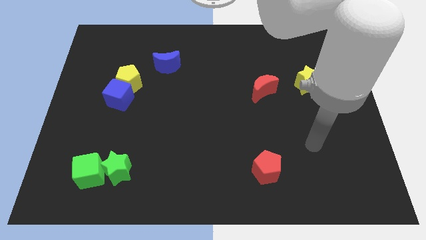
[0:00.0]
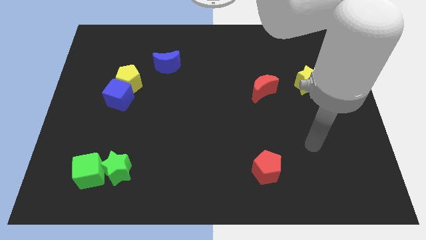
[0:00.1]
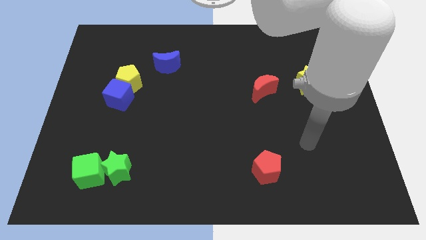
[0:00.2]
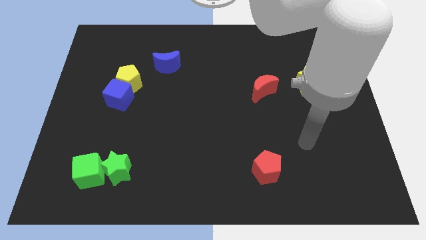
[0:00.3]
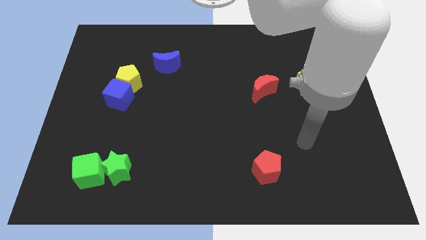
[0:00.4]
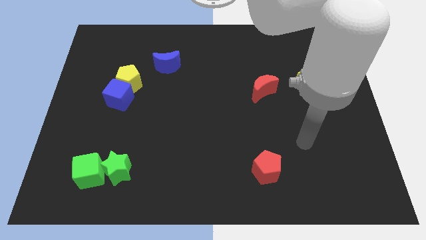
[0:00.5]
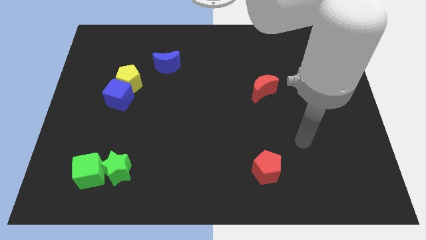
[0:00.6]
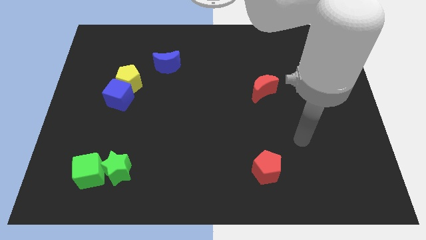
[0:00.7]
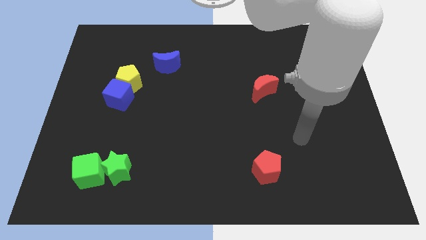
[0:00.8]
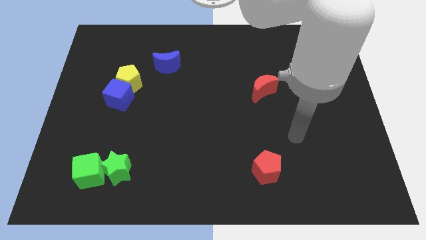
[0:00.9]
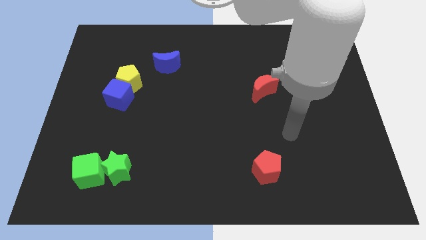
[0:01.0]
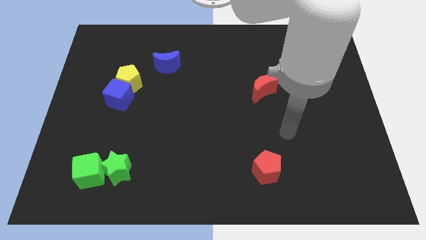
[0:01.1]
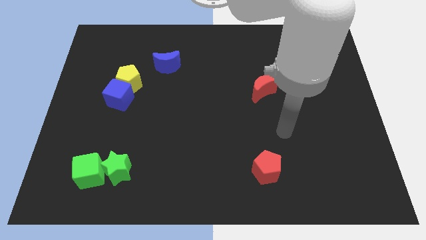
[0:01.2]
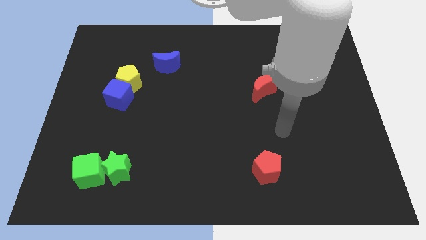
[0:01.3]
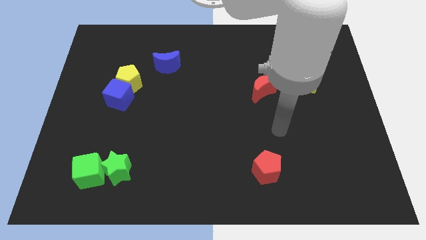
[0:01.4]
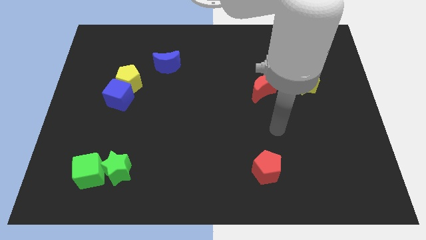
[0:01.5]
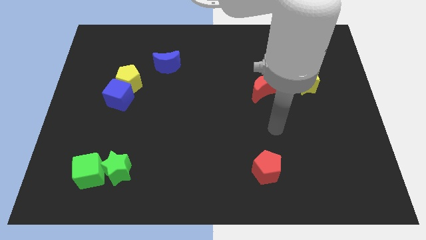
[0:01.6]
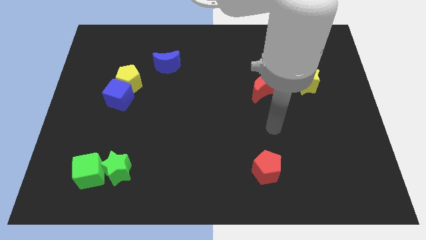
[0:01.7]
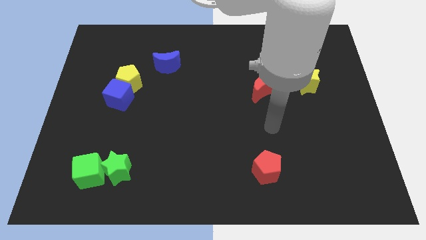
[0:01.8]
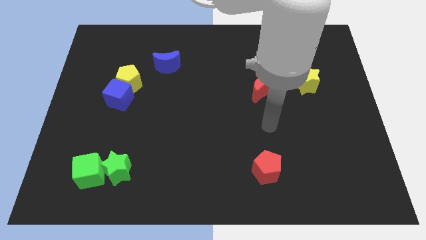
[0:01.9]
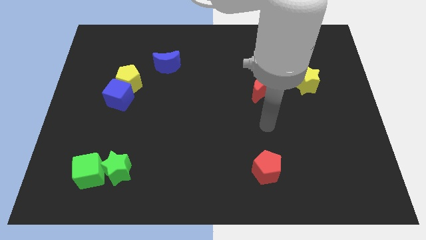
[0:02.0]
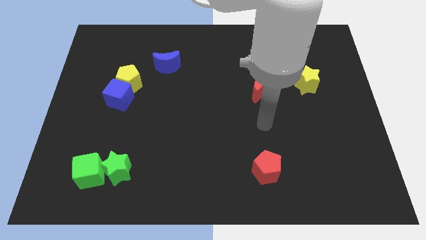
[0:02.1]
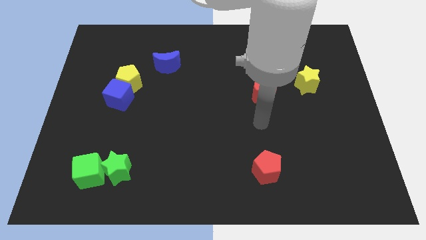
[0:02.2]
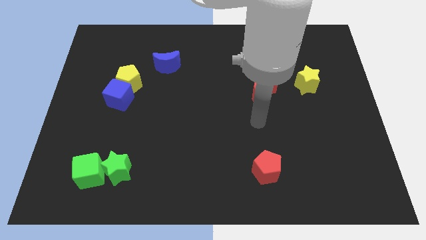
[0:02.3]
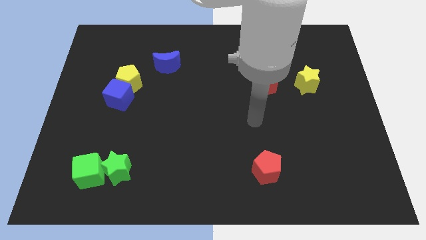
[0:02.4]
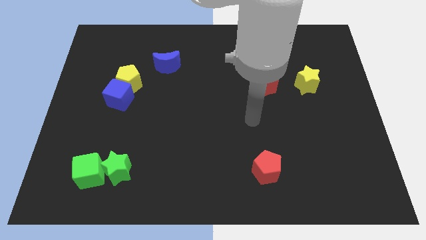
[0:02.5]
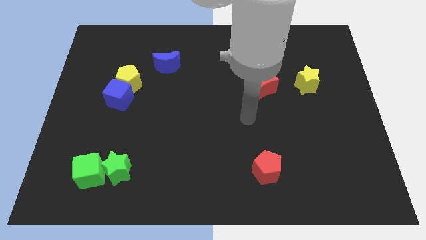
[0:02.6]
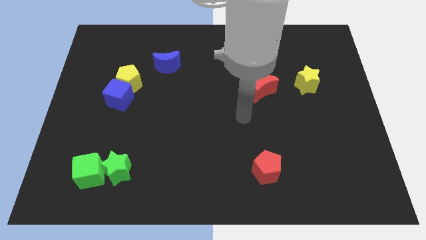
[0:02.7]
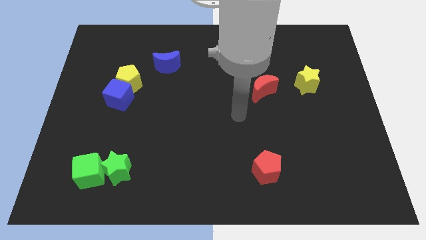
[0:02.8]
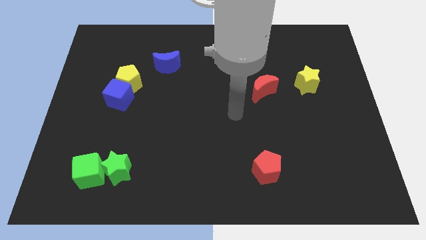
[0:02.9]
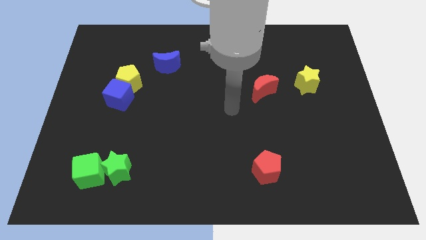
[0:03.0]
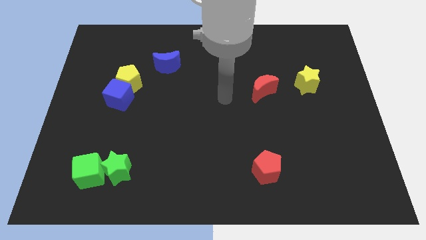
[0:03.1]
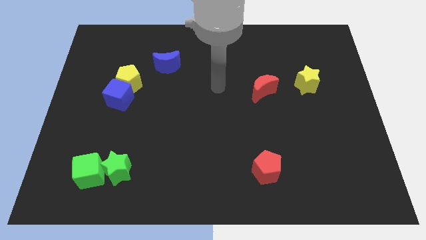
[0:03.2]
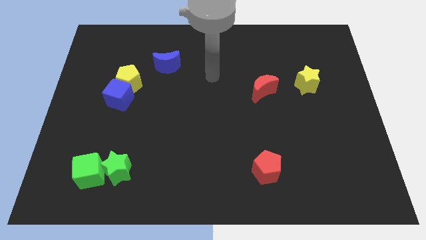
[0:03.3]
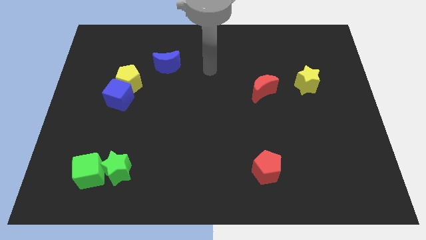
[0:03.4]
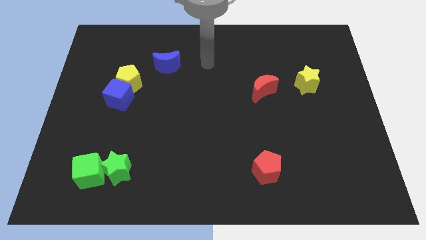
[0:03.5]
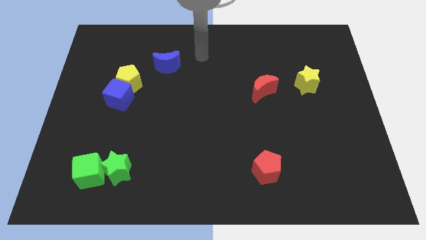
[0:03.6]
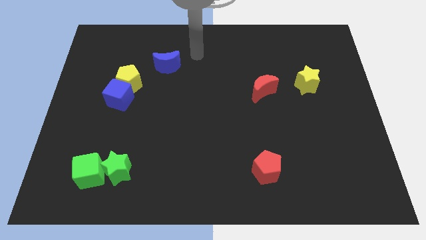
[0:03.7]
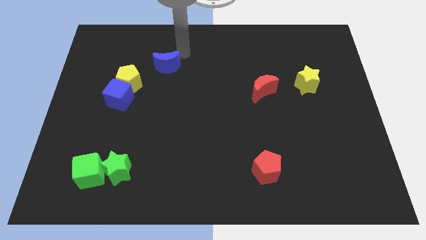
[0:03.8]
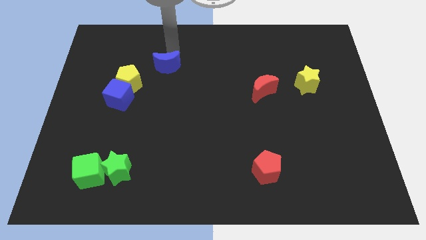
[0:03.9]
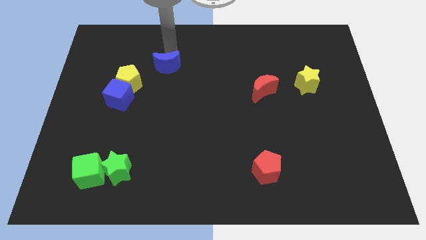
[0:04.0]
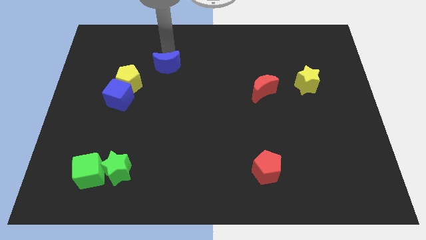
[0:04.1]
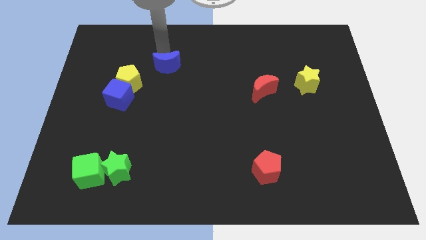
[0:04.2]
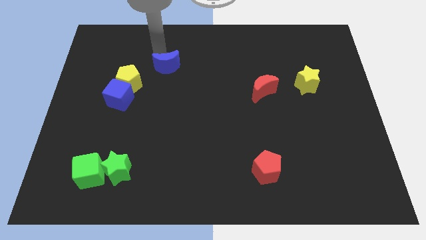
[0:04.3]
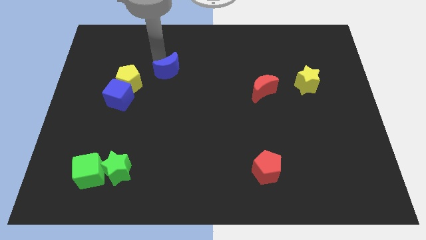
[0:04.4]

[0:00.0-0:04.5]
place your hand at the top of the blue moon

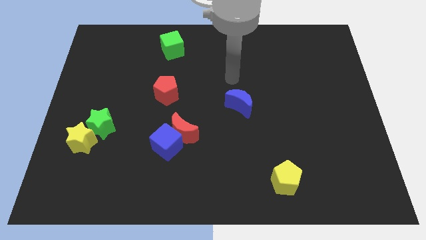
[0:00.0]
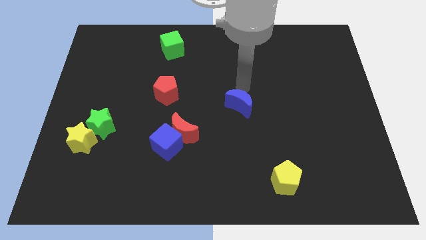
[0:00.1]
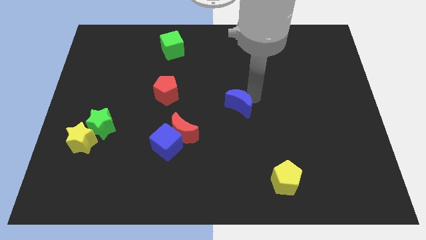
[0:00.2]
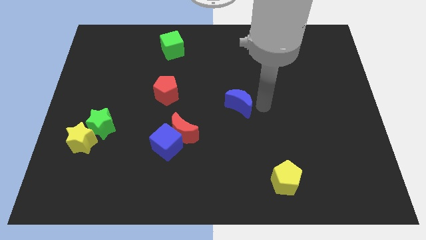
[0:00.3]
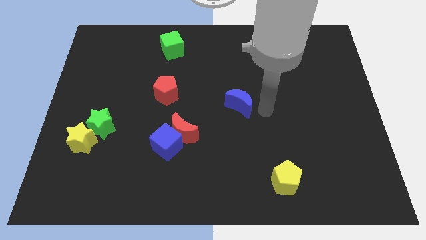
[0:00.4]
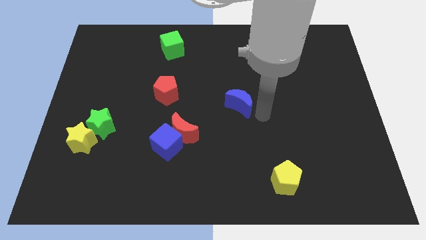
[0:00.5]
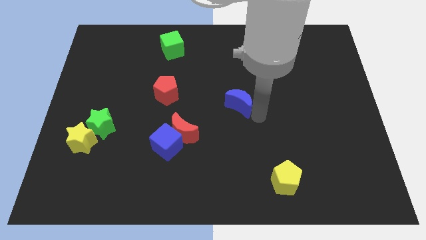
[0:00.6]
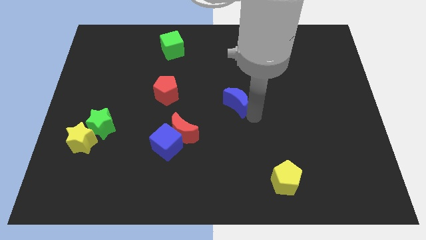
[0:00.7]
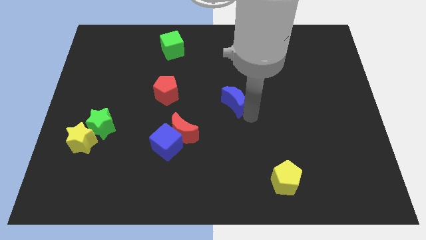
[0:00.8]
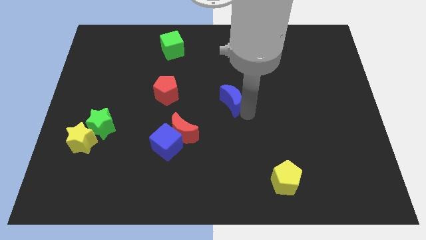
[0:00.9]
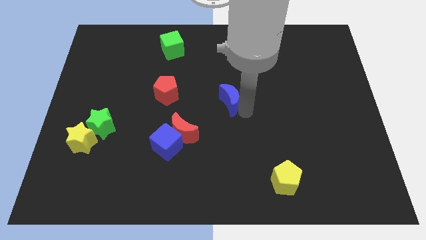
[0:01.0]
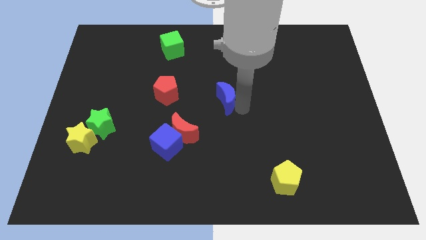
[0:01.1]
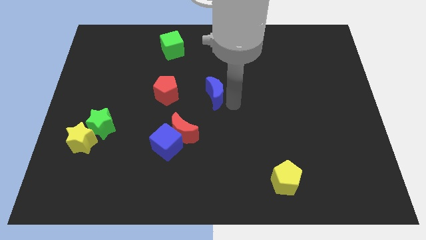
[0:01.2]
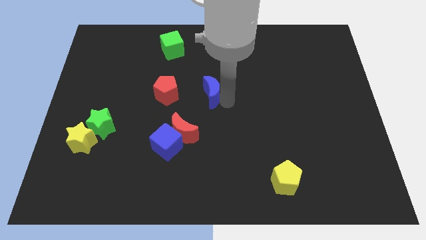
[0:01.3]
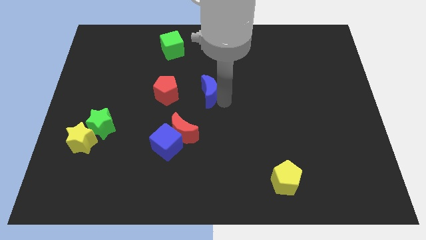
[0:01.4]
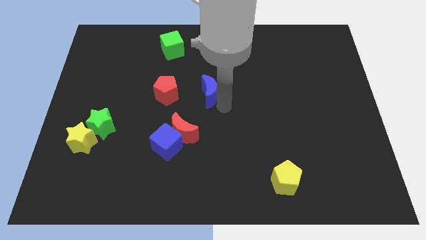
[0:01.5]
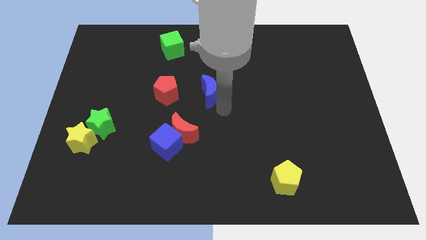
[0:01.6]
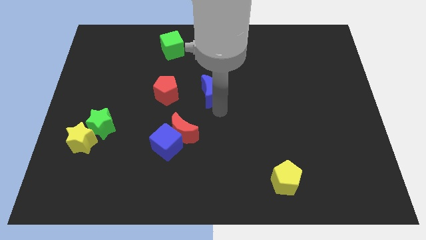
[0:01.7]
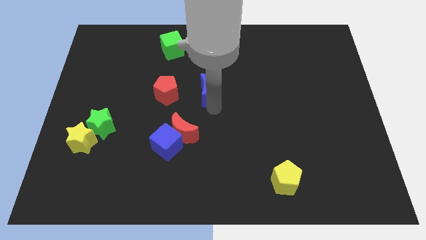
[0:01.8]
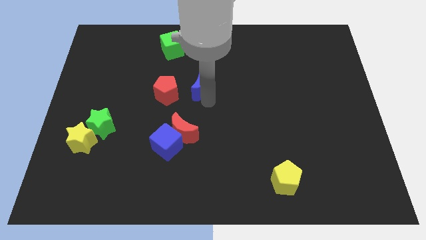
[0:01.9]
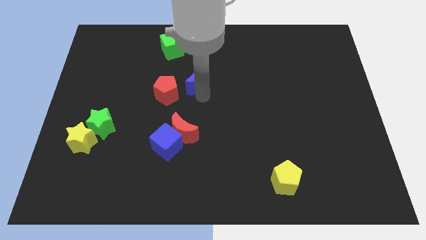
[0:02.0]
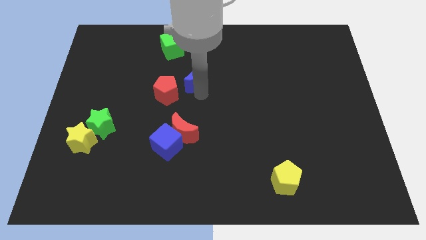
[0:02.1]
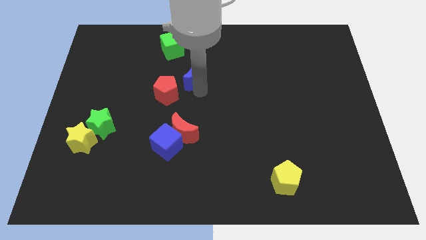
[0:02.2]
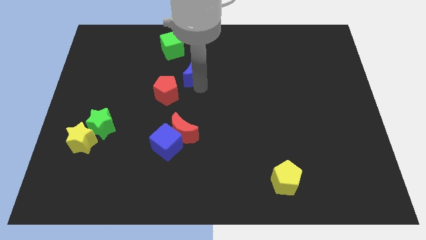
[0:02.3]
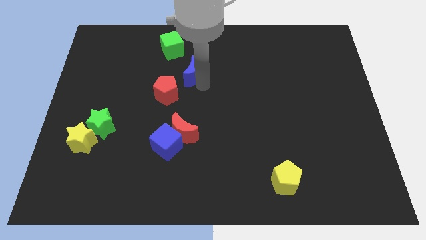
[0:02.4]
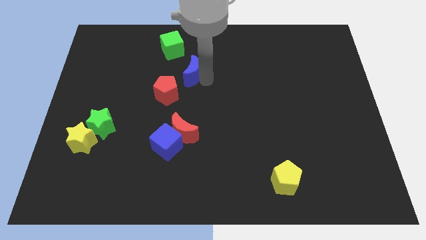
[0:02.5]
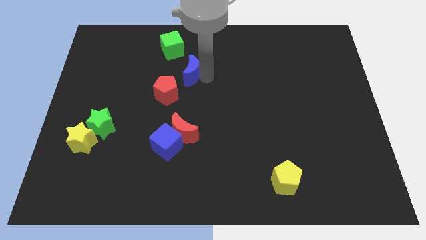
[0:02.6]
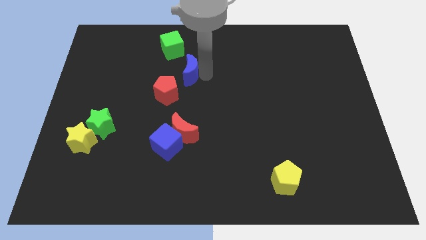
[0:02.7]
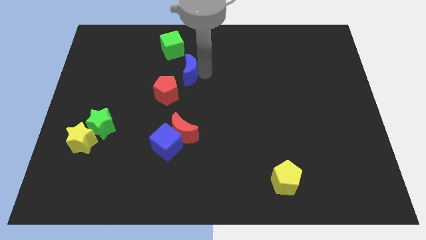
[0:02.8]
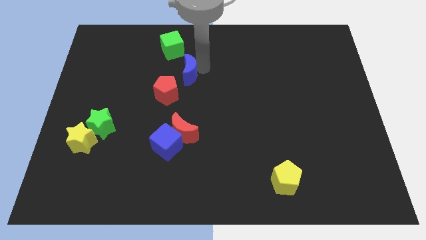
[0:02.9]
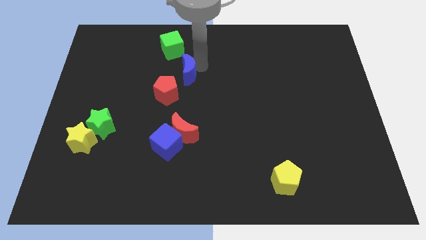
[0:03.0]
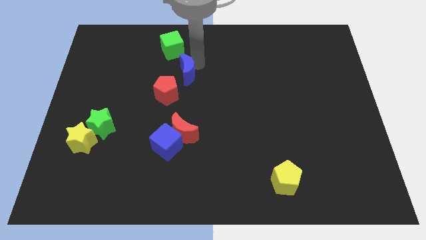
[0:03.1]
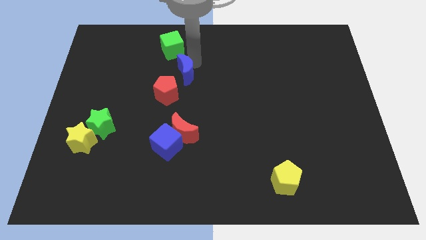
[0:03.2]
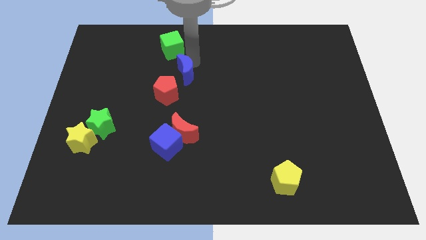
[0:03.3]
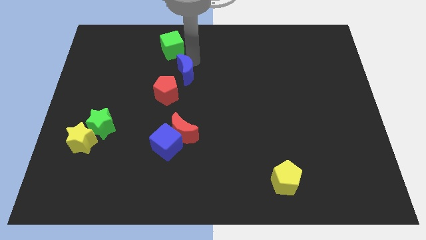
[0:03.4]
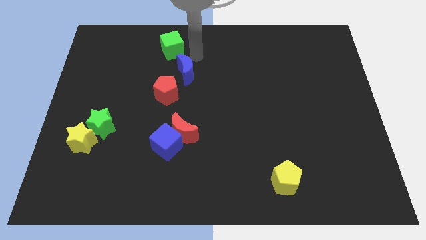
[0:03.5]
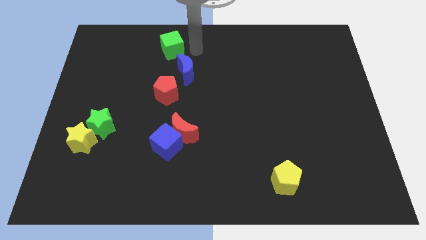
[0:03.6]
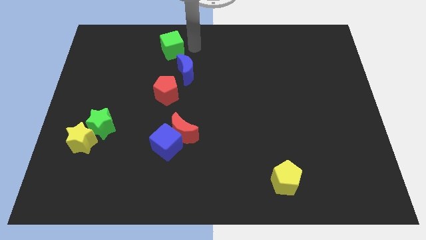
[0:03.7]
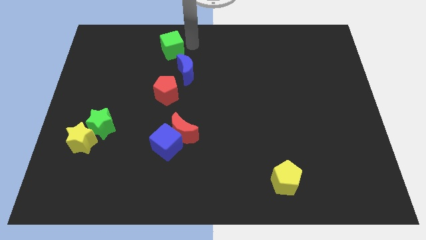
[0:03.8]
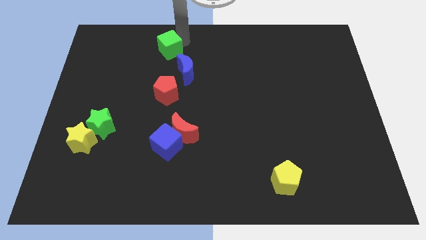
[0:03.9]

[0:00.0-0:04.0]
place the blue crescent below the green cube

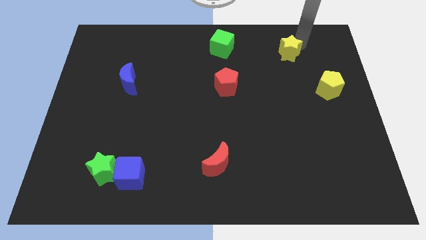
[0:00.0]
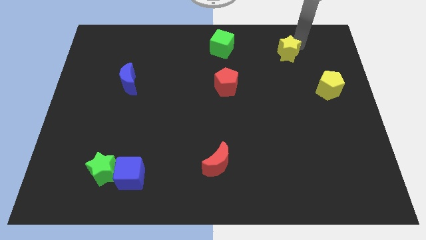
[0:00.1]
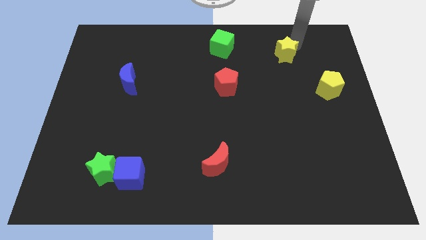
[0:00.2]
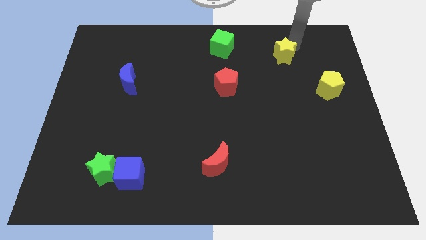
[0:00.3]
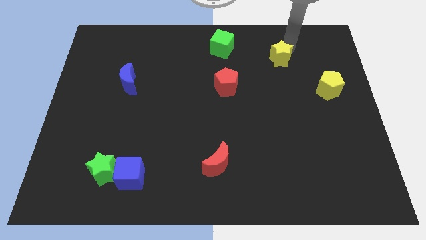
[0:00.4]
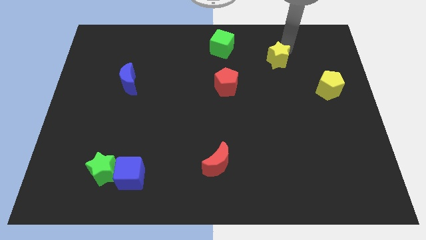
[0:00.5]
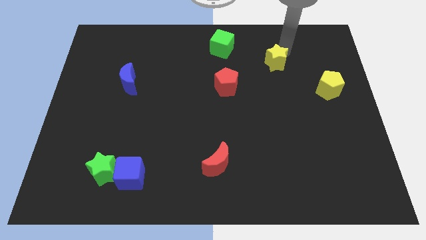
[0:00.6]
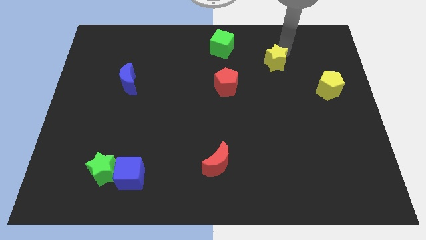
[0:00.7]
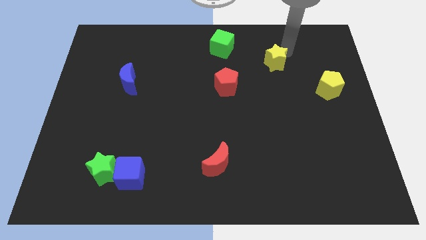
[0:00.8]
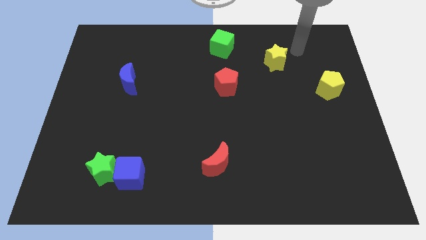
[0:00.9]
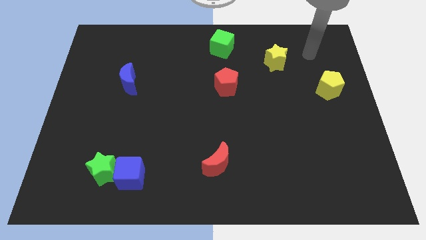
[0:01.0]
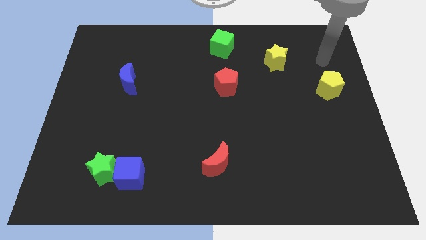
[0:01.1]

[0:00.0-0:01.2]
push the yellow star in between the green cube and yellow pentagon
